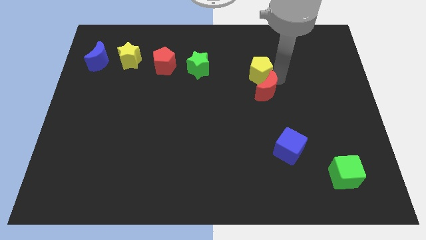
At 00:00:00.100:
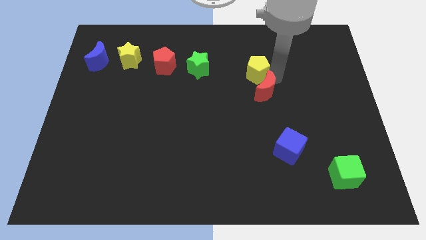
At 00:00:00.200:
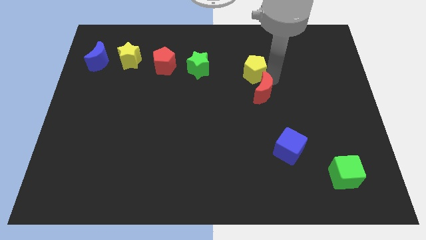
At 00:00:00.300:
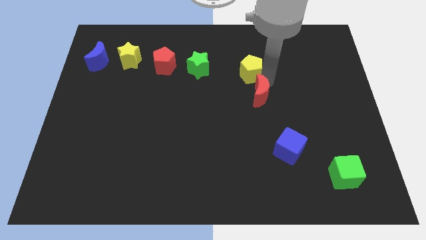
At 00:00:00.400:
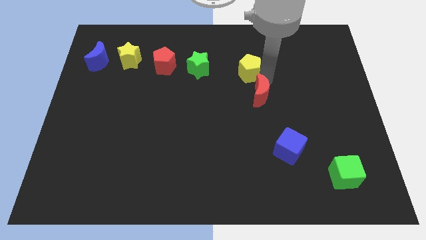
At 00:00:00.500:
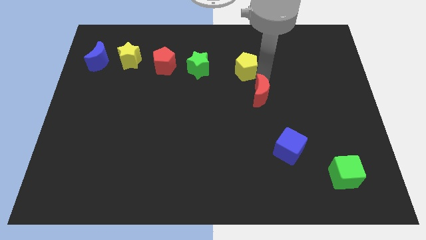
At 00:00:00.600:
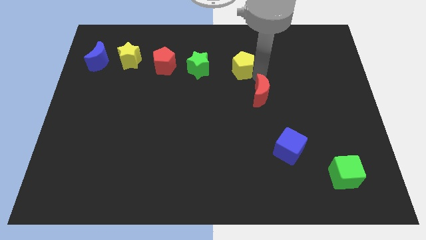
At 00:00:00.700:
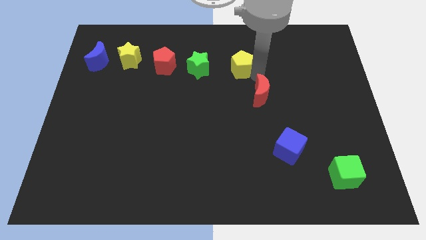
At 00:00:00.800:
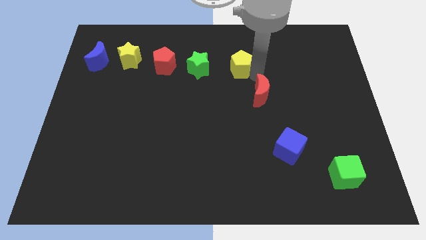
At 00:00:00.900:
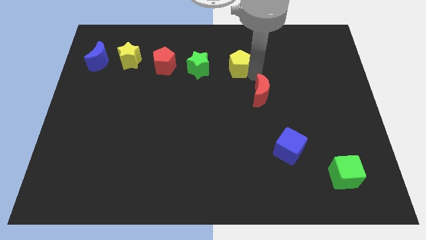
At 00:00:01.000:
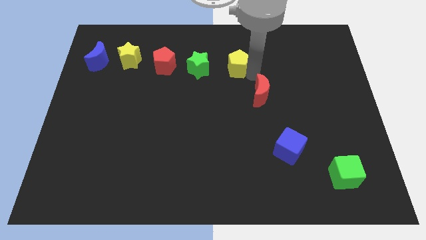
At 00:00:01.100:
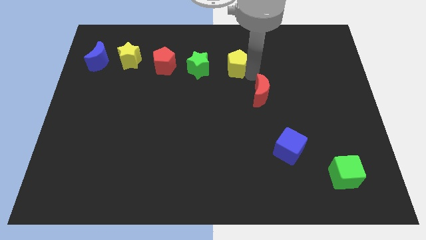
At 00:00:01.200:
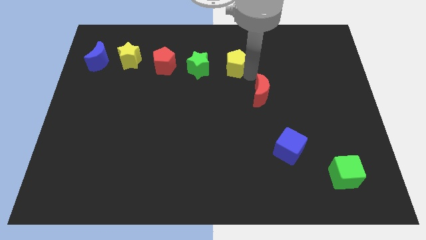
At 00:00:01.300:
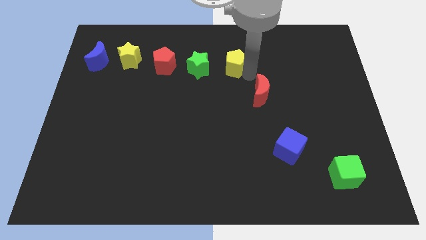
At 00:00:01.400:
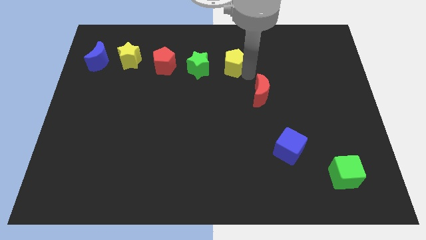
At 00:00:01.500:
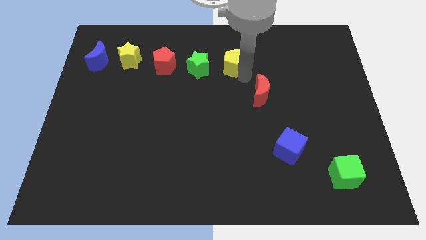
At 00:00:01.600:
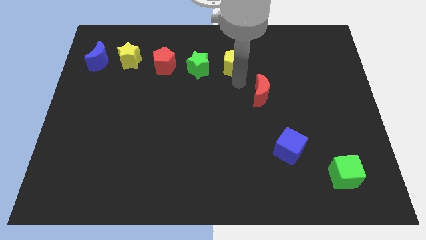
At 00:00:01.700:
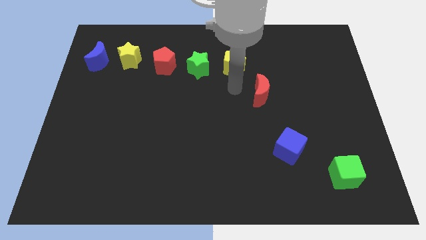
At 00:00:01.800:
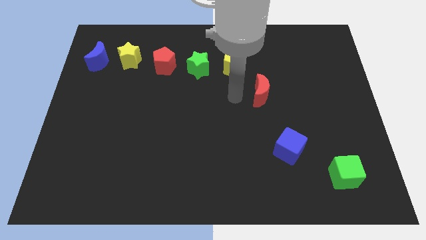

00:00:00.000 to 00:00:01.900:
put the yellow pentagon to the right side of the green star

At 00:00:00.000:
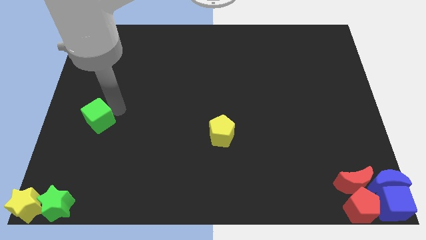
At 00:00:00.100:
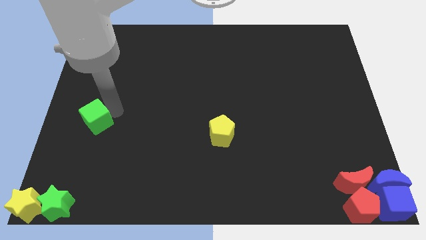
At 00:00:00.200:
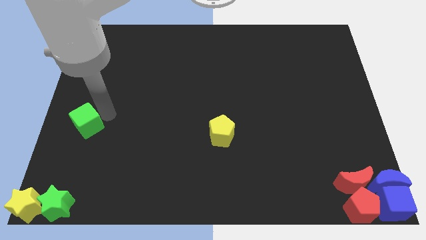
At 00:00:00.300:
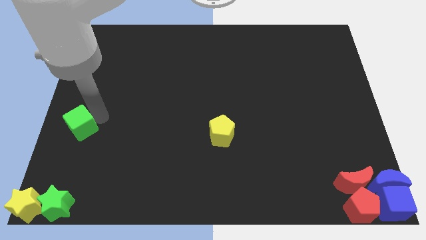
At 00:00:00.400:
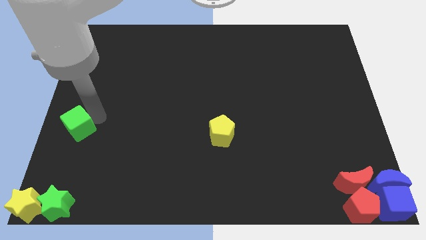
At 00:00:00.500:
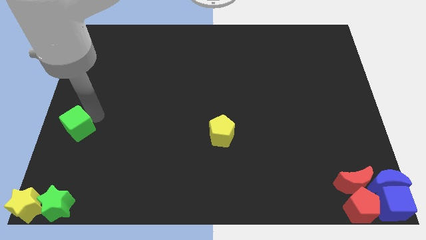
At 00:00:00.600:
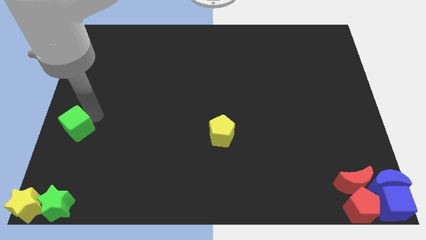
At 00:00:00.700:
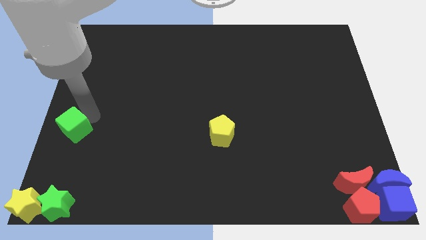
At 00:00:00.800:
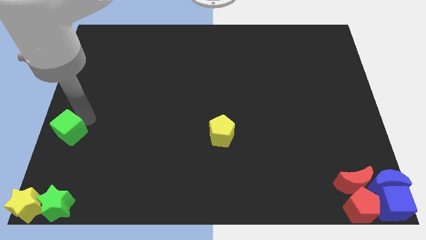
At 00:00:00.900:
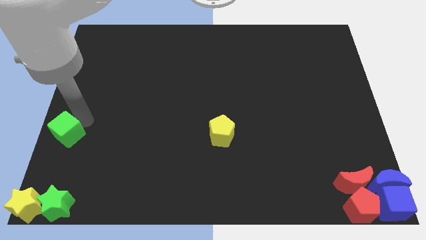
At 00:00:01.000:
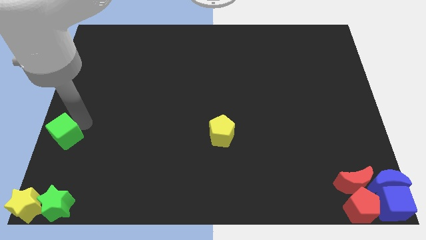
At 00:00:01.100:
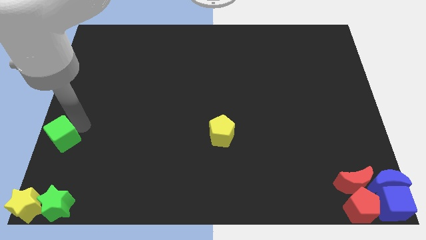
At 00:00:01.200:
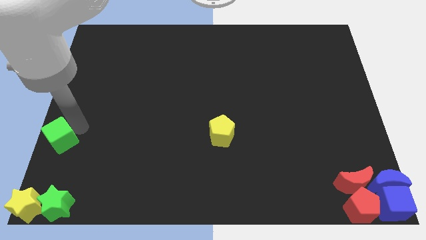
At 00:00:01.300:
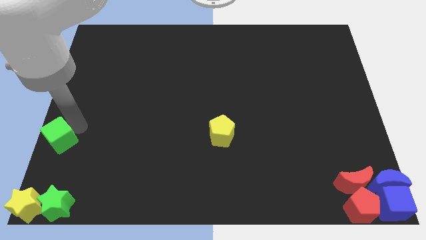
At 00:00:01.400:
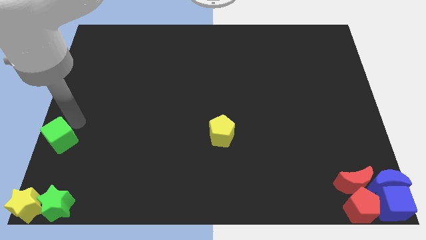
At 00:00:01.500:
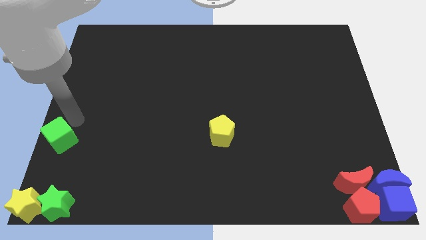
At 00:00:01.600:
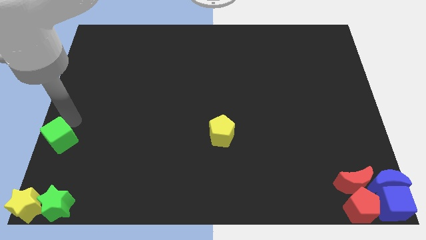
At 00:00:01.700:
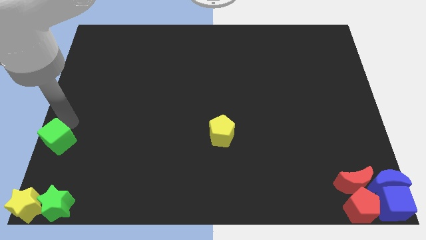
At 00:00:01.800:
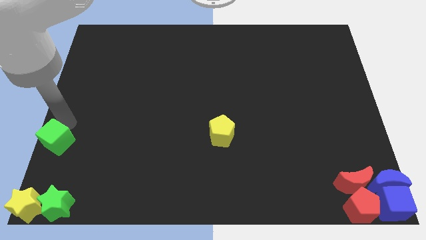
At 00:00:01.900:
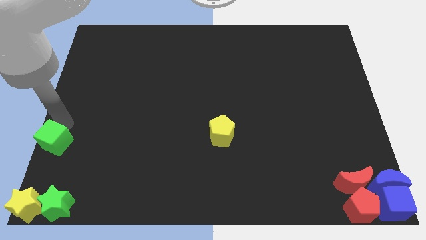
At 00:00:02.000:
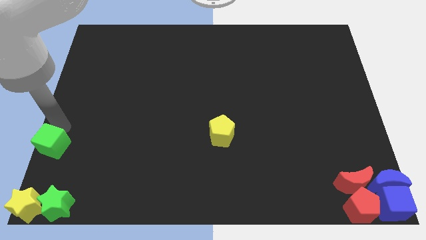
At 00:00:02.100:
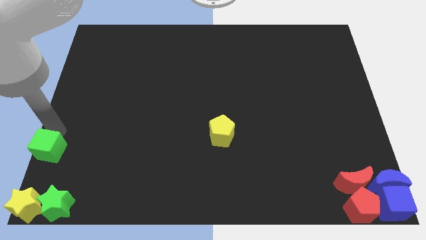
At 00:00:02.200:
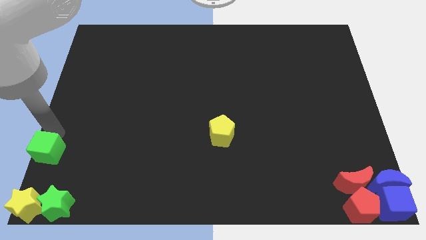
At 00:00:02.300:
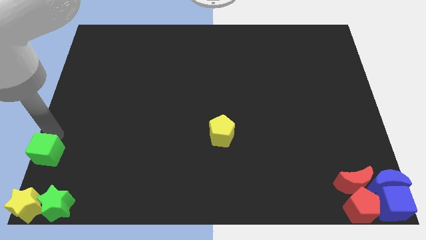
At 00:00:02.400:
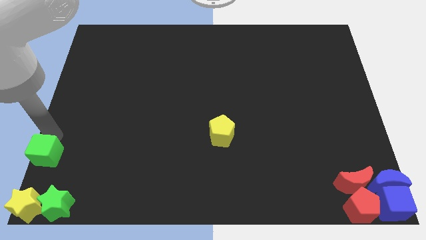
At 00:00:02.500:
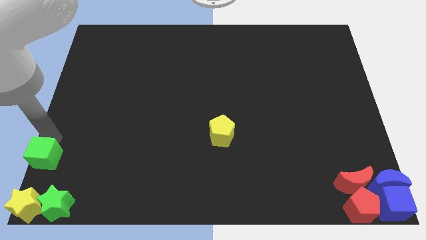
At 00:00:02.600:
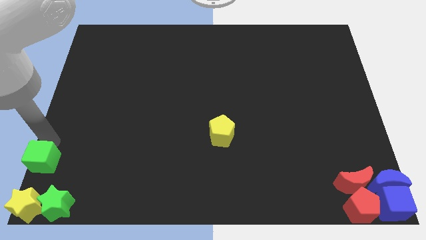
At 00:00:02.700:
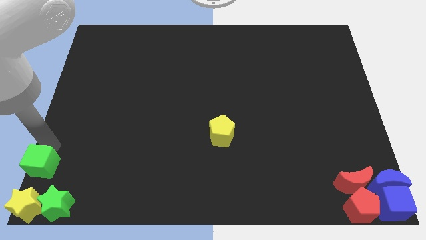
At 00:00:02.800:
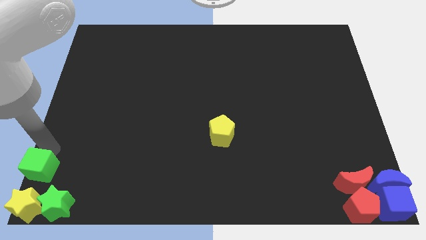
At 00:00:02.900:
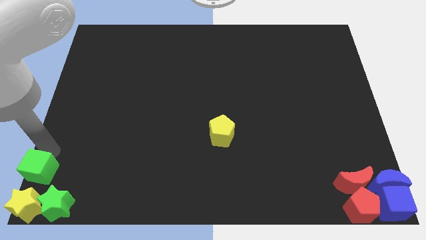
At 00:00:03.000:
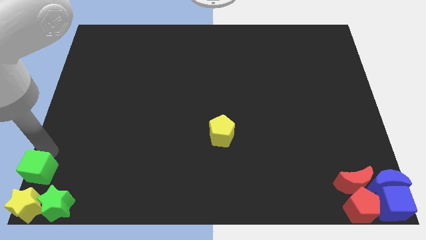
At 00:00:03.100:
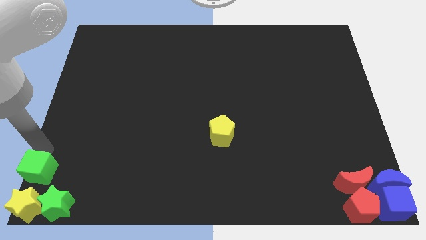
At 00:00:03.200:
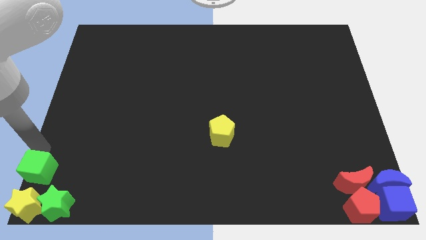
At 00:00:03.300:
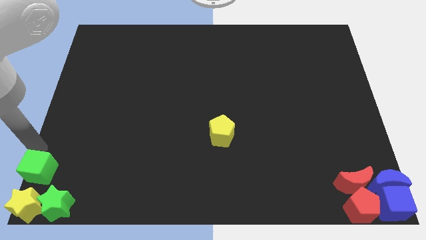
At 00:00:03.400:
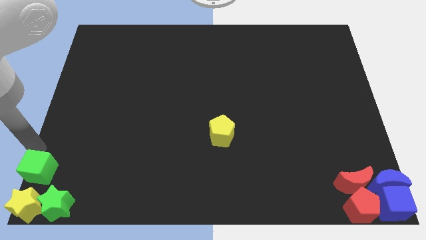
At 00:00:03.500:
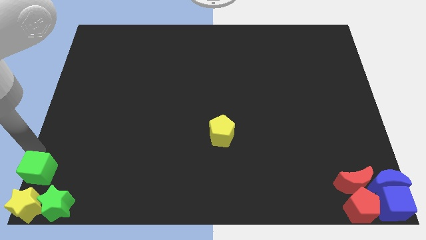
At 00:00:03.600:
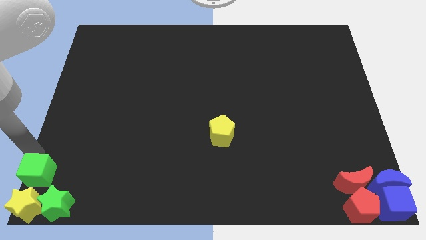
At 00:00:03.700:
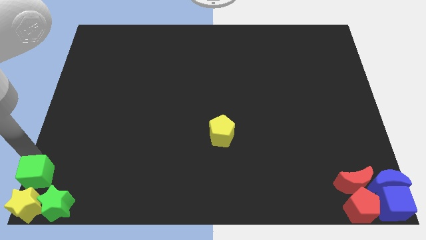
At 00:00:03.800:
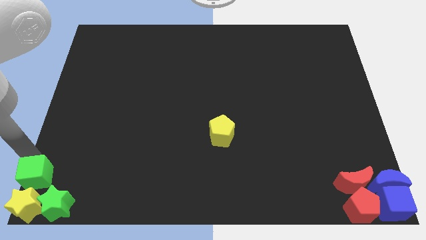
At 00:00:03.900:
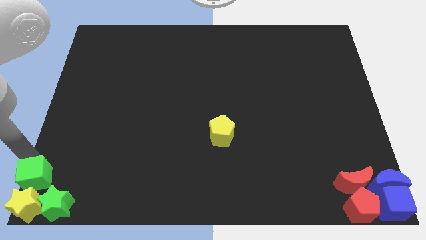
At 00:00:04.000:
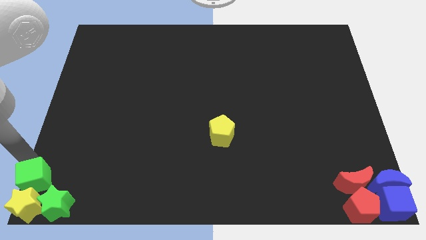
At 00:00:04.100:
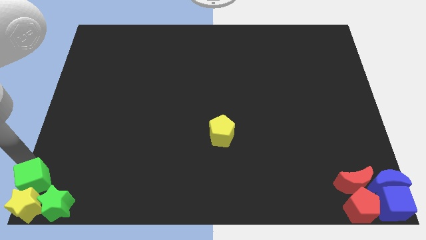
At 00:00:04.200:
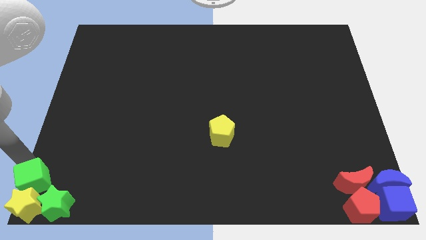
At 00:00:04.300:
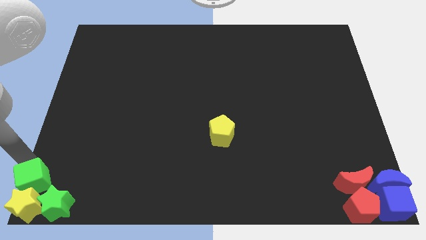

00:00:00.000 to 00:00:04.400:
push green cube towards green star and yellow star

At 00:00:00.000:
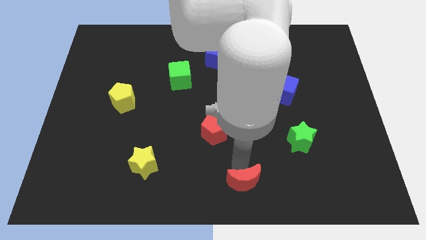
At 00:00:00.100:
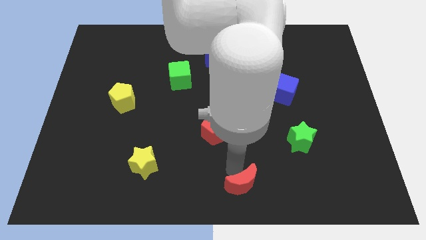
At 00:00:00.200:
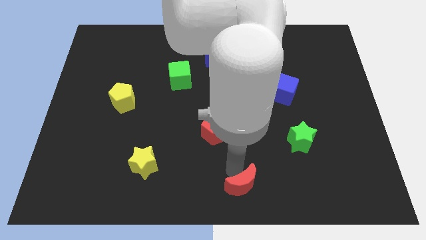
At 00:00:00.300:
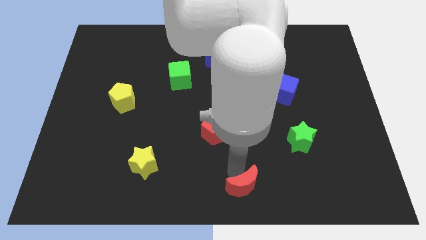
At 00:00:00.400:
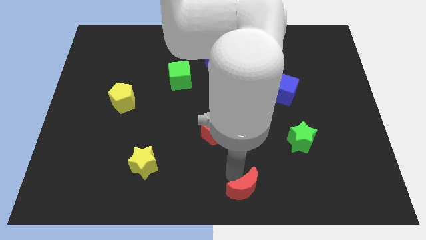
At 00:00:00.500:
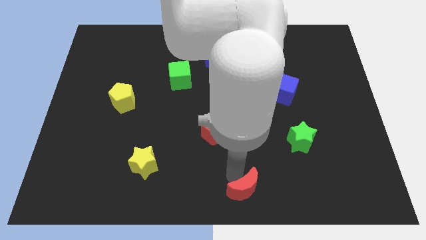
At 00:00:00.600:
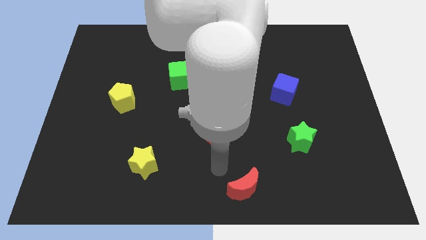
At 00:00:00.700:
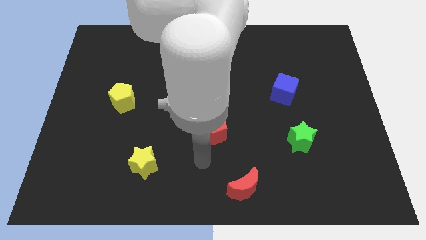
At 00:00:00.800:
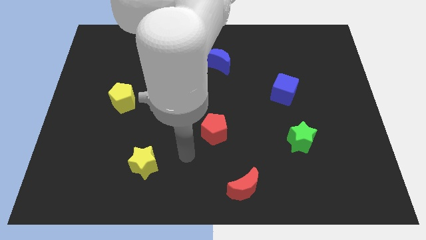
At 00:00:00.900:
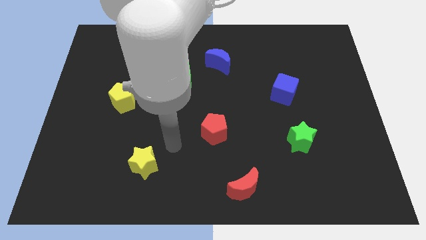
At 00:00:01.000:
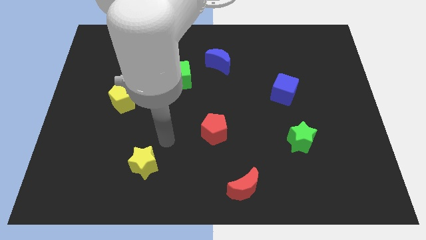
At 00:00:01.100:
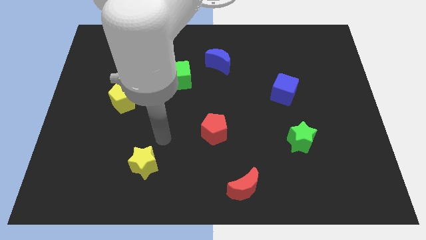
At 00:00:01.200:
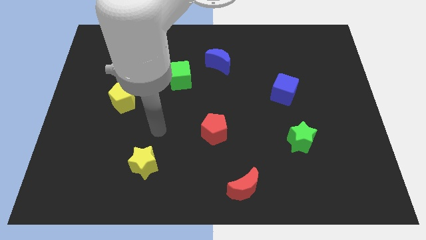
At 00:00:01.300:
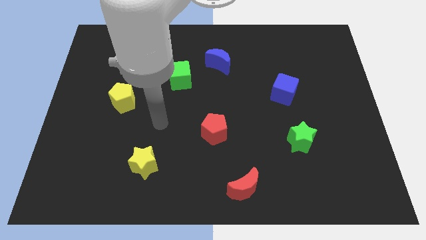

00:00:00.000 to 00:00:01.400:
slightly move the red moon towards the bottom

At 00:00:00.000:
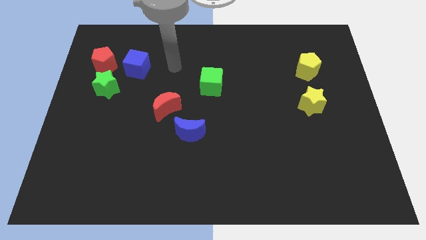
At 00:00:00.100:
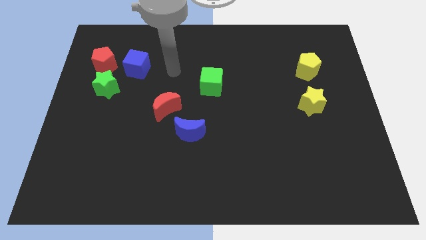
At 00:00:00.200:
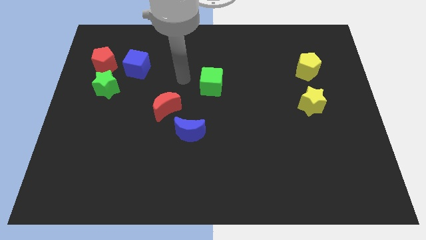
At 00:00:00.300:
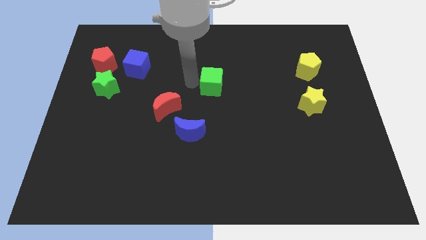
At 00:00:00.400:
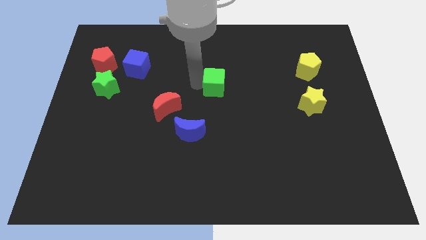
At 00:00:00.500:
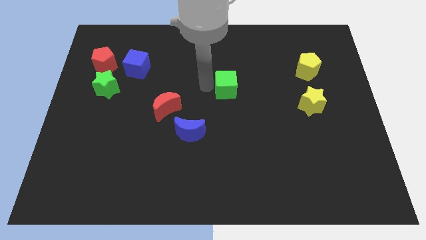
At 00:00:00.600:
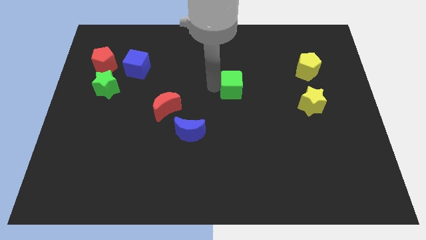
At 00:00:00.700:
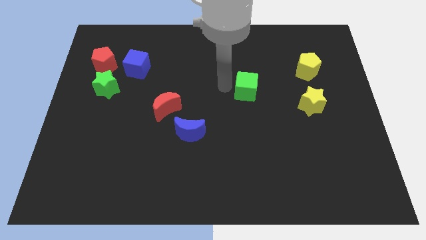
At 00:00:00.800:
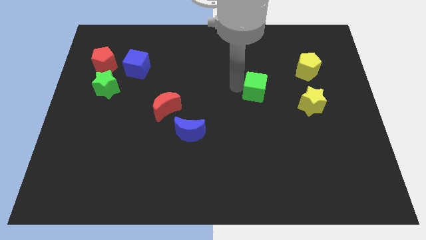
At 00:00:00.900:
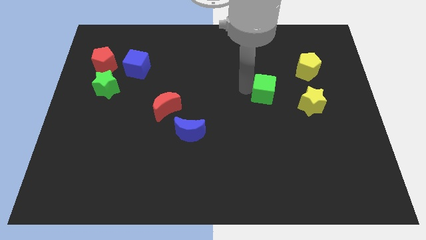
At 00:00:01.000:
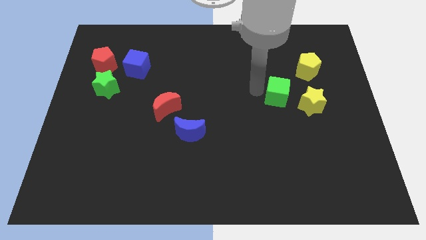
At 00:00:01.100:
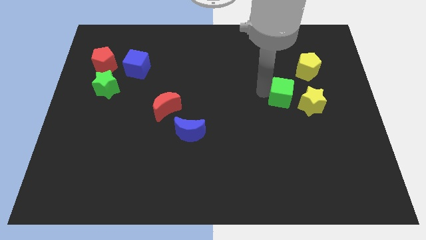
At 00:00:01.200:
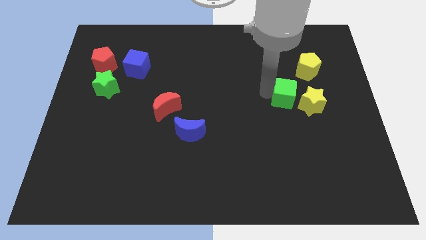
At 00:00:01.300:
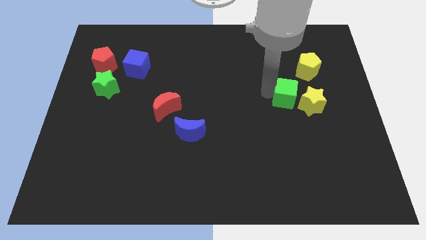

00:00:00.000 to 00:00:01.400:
move the green cube to the right of the board
